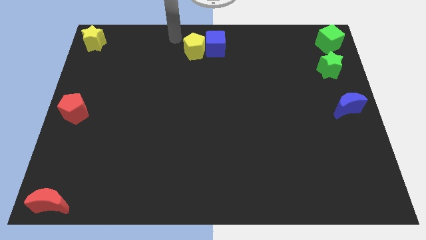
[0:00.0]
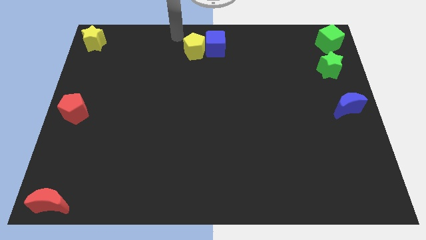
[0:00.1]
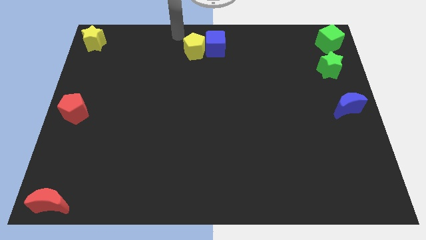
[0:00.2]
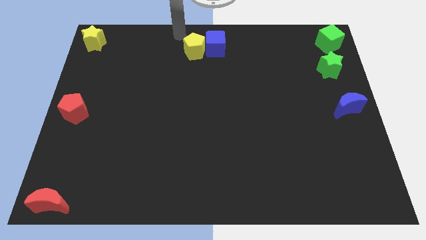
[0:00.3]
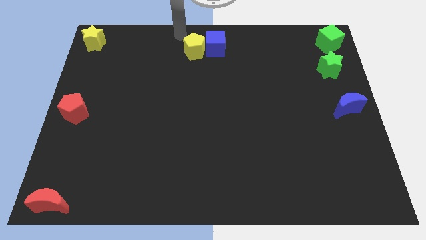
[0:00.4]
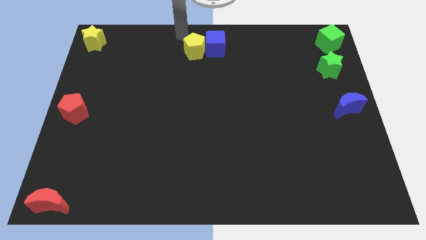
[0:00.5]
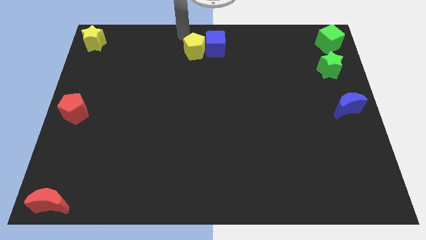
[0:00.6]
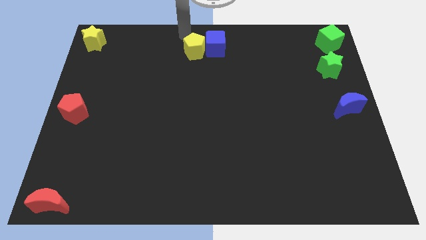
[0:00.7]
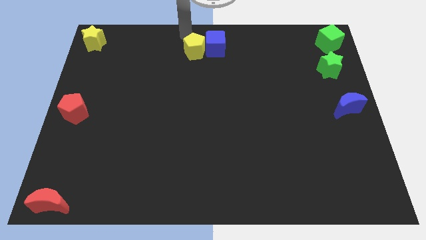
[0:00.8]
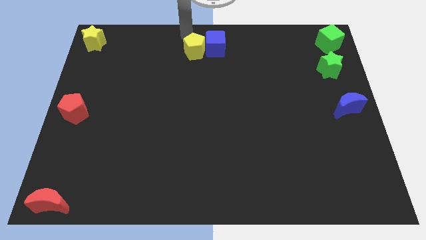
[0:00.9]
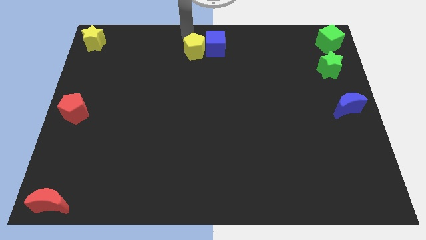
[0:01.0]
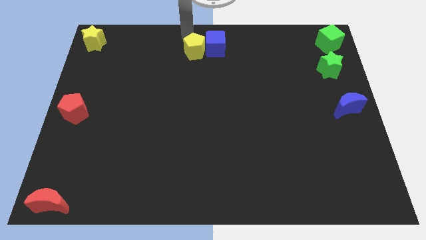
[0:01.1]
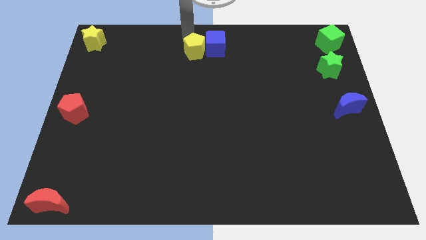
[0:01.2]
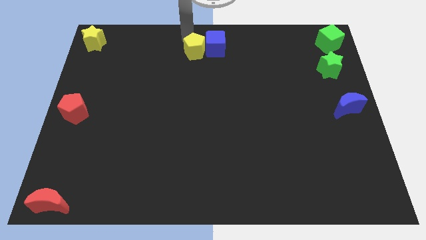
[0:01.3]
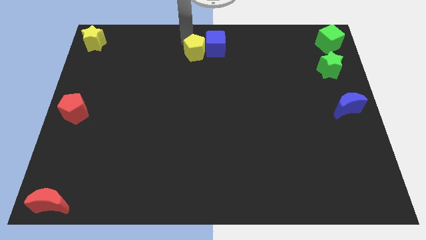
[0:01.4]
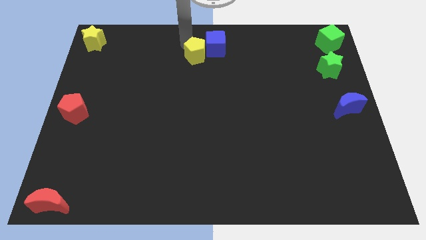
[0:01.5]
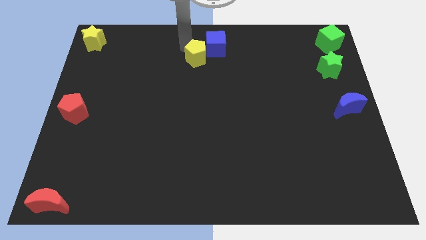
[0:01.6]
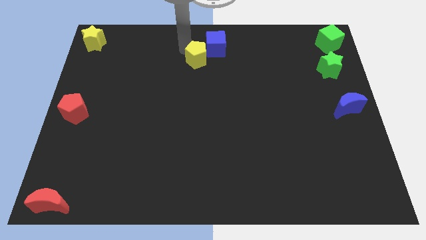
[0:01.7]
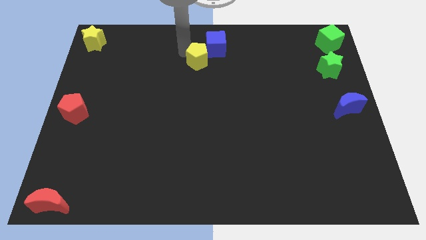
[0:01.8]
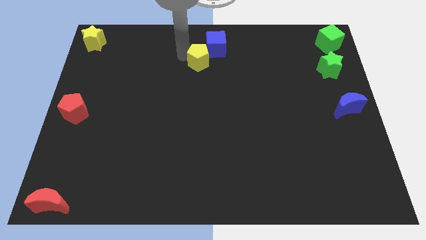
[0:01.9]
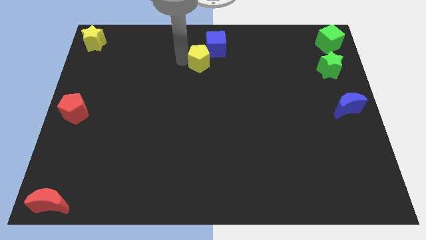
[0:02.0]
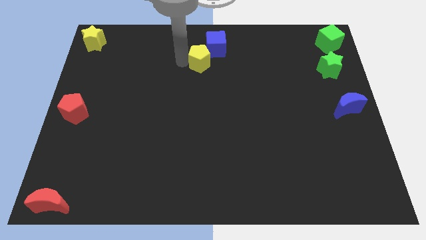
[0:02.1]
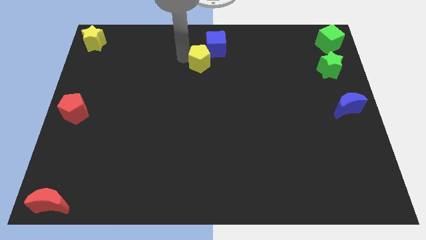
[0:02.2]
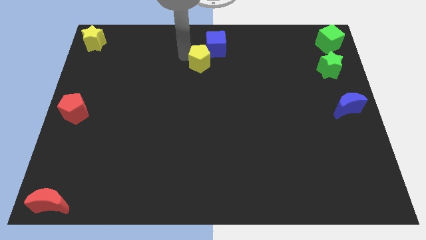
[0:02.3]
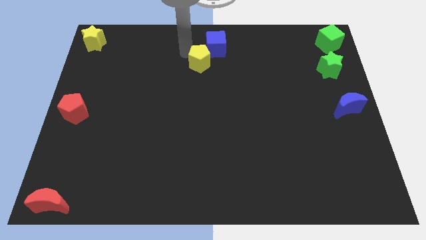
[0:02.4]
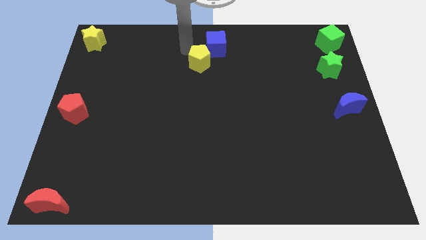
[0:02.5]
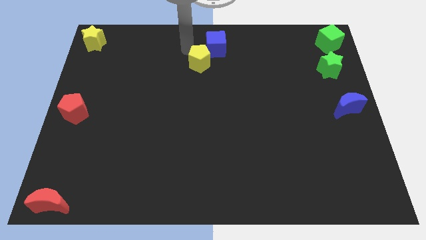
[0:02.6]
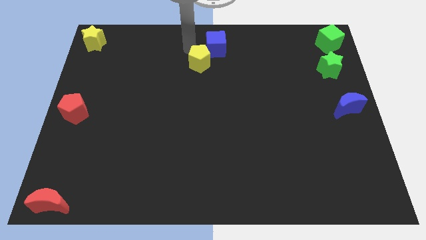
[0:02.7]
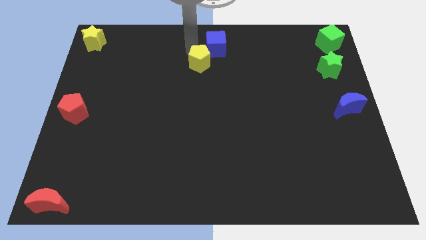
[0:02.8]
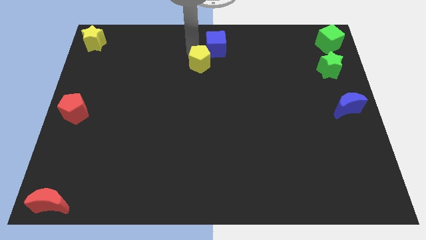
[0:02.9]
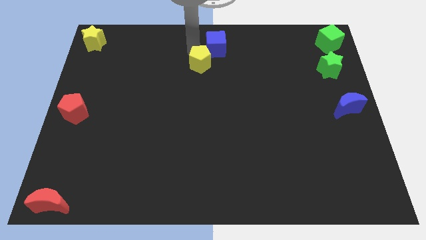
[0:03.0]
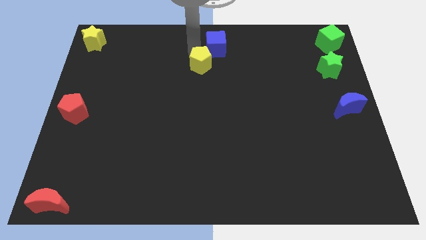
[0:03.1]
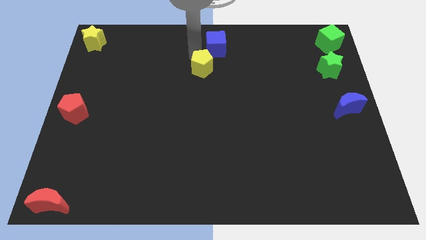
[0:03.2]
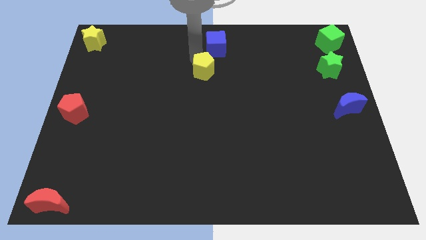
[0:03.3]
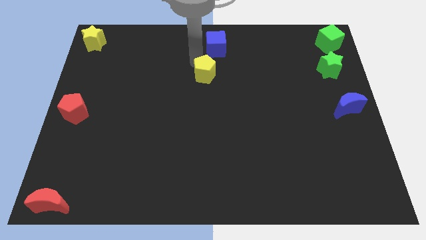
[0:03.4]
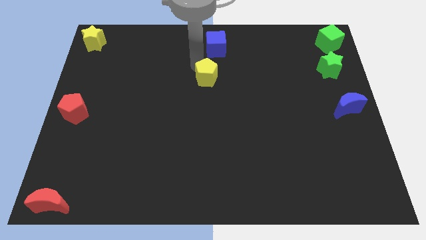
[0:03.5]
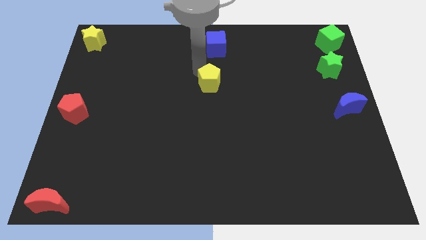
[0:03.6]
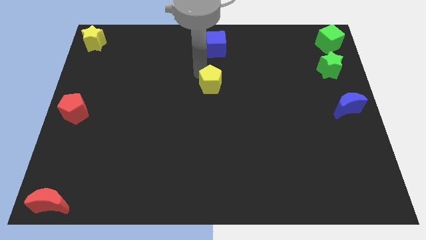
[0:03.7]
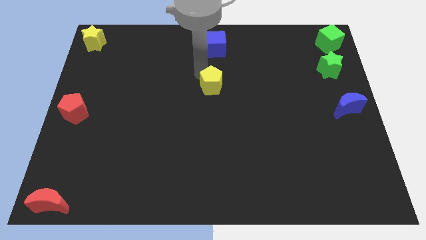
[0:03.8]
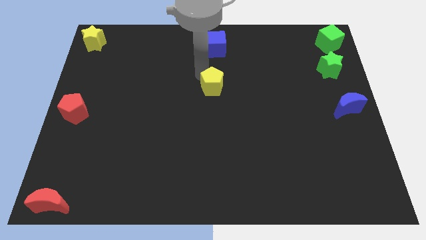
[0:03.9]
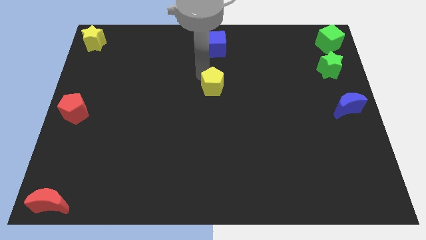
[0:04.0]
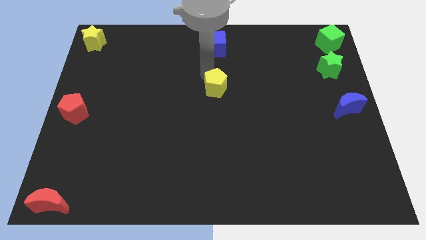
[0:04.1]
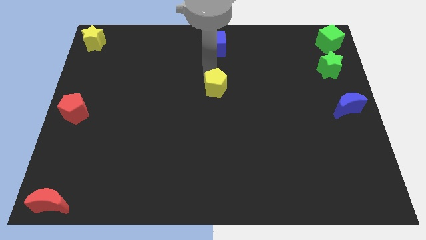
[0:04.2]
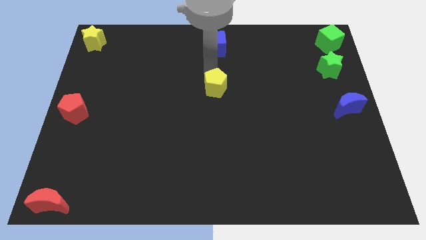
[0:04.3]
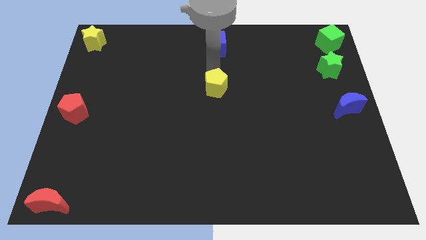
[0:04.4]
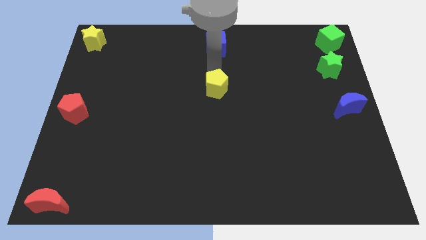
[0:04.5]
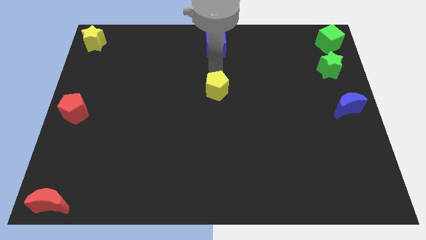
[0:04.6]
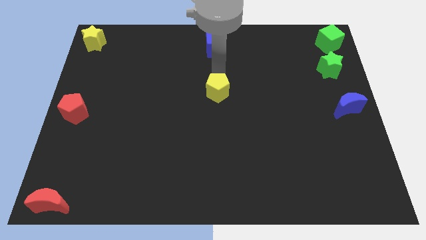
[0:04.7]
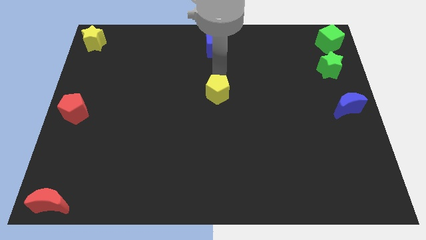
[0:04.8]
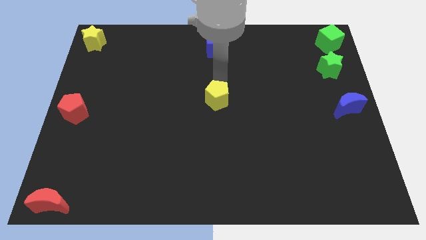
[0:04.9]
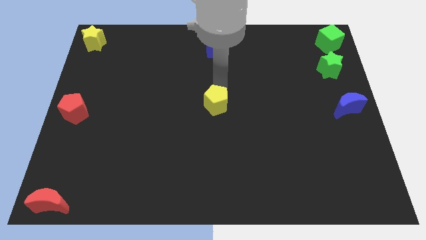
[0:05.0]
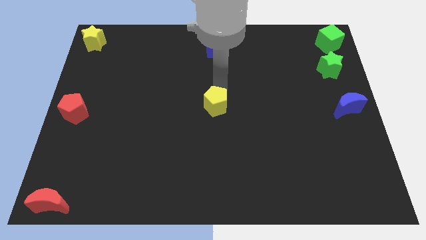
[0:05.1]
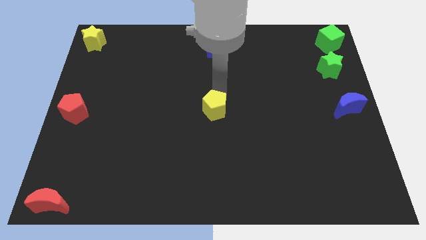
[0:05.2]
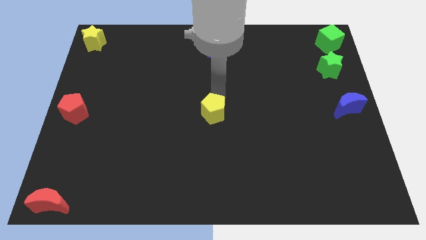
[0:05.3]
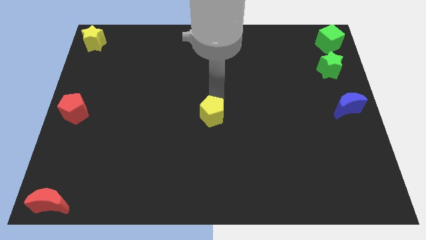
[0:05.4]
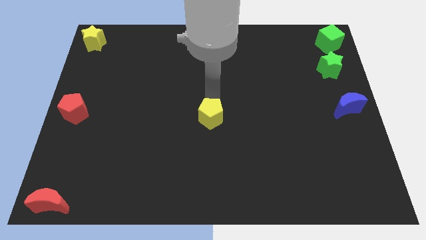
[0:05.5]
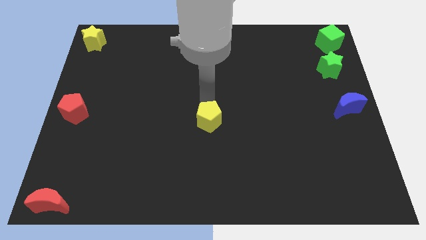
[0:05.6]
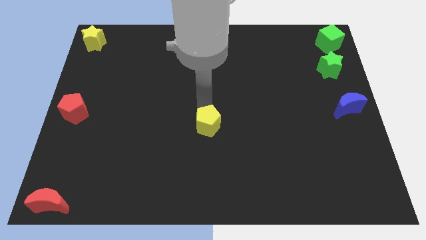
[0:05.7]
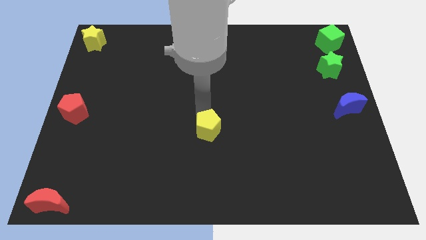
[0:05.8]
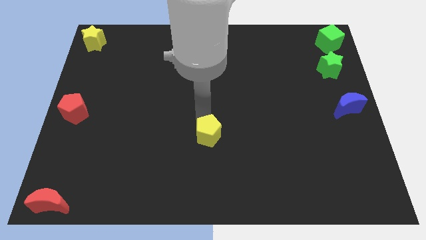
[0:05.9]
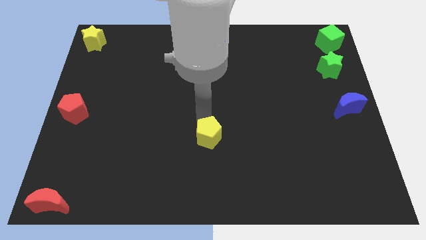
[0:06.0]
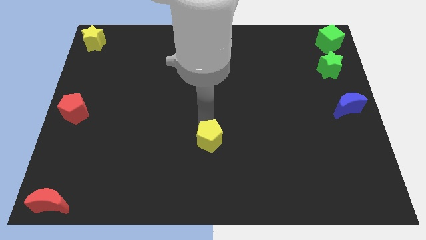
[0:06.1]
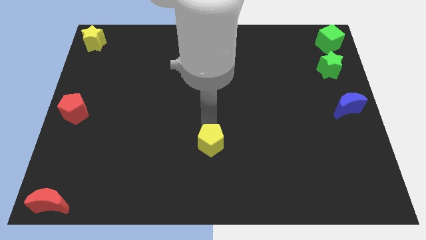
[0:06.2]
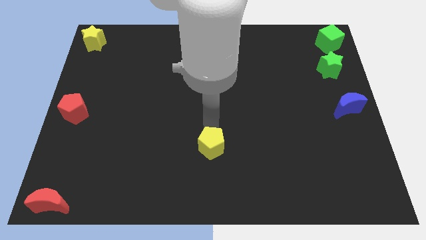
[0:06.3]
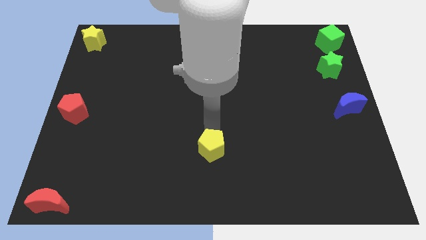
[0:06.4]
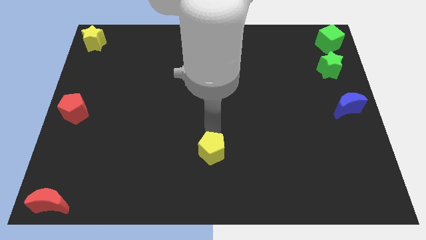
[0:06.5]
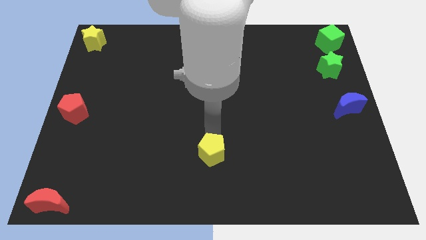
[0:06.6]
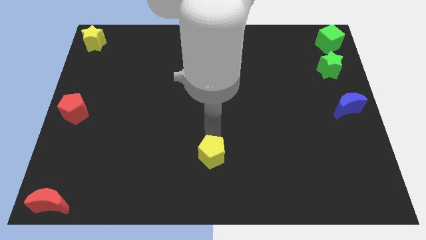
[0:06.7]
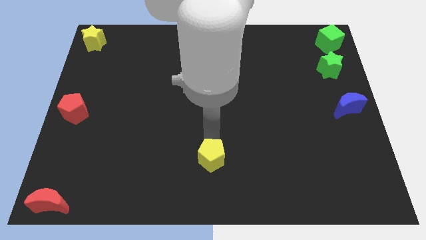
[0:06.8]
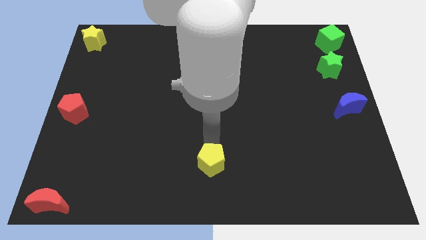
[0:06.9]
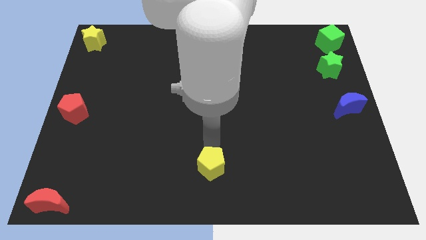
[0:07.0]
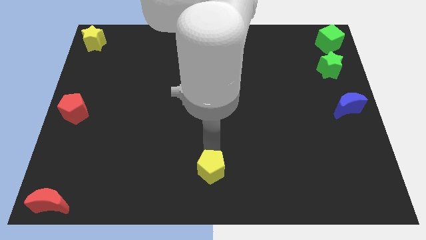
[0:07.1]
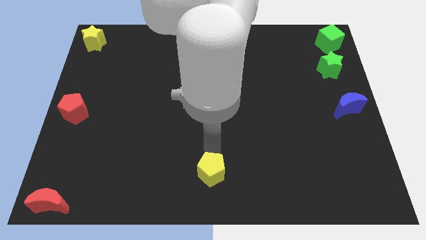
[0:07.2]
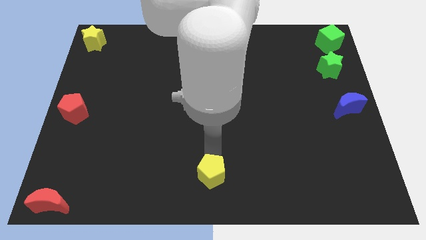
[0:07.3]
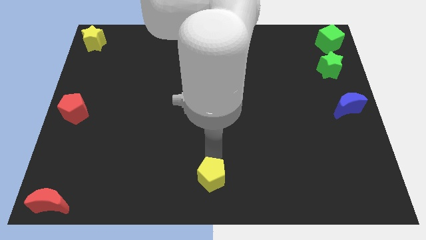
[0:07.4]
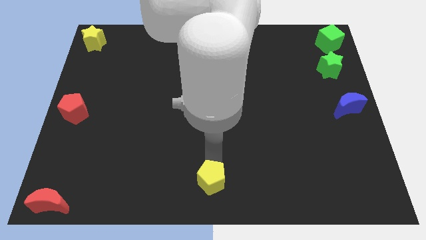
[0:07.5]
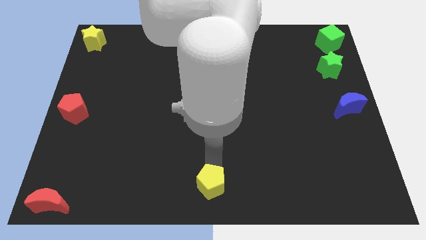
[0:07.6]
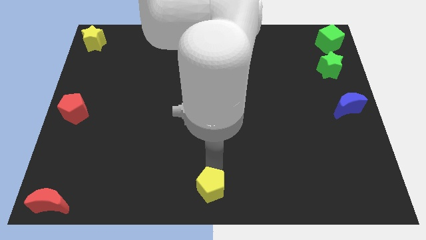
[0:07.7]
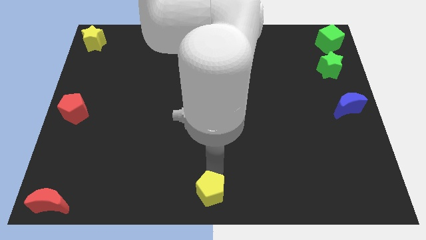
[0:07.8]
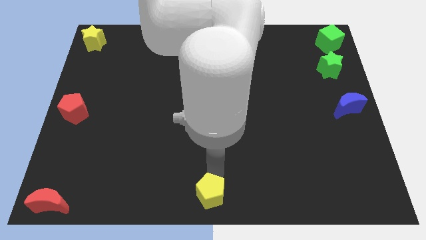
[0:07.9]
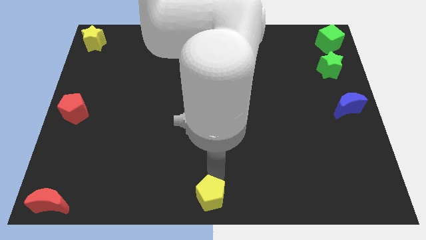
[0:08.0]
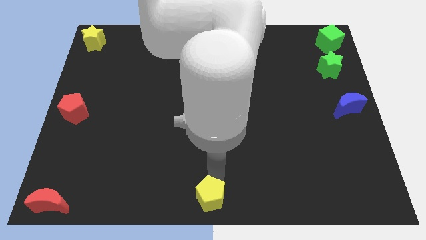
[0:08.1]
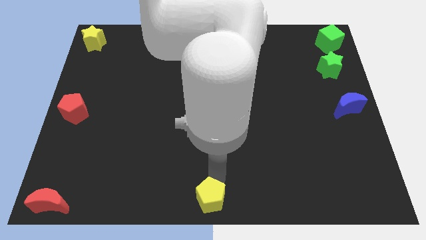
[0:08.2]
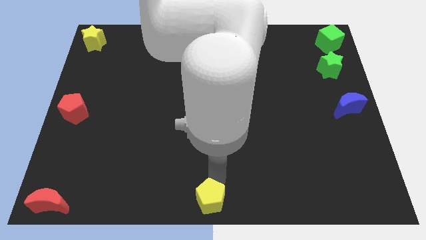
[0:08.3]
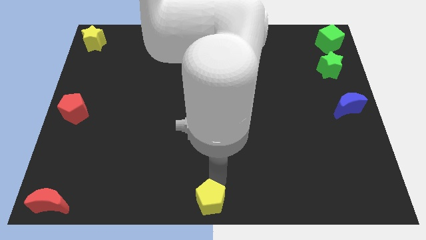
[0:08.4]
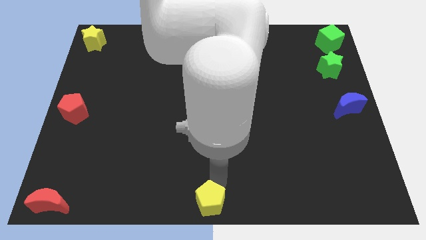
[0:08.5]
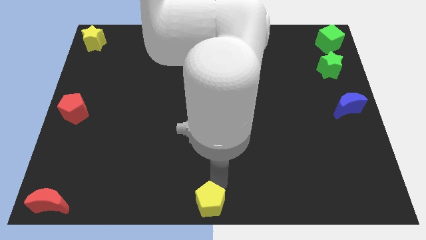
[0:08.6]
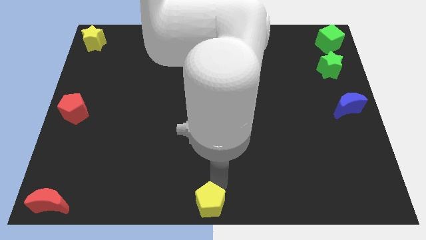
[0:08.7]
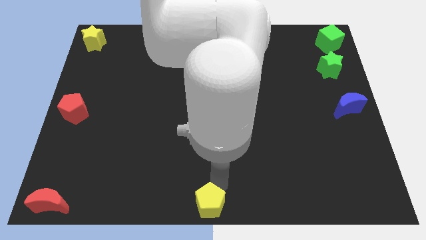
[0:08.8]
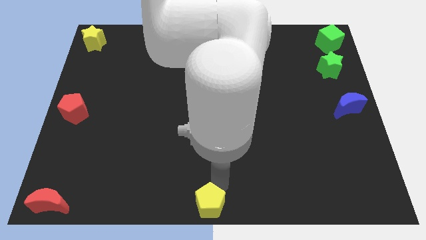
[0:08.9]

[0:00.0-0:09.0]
drag pentagon to the bottom middle of the board

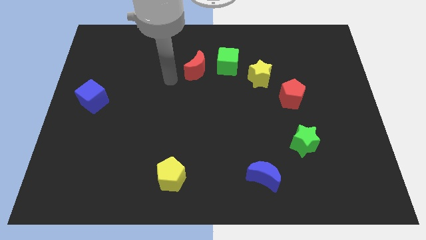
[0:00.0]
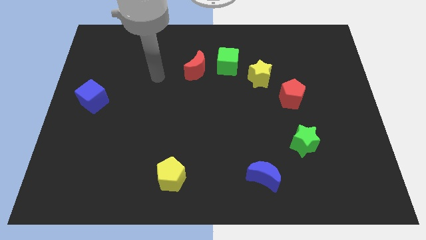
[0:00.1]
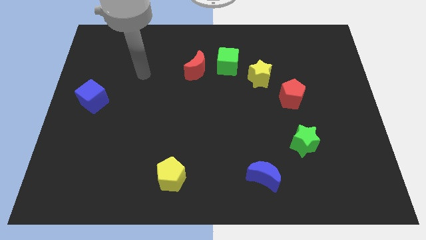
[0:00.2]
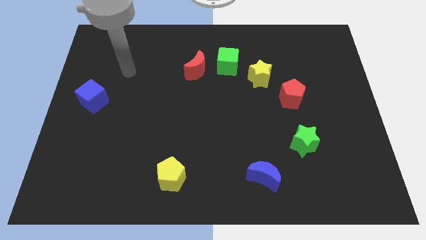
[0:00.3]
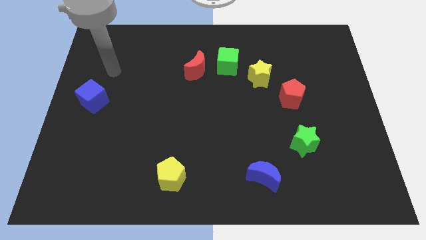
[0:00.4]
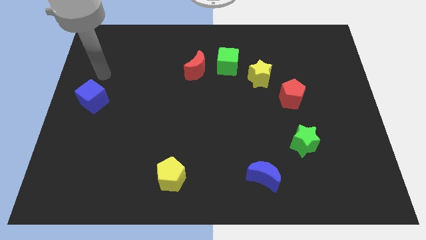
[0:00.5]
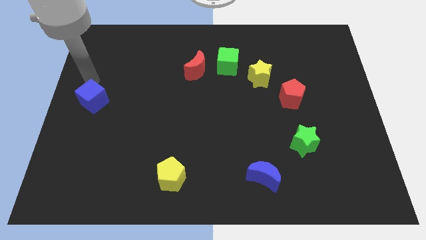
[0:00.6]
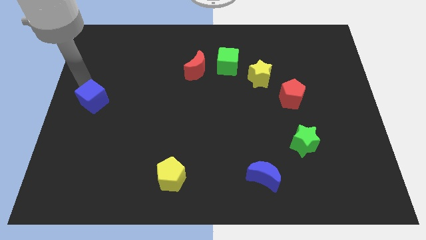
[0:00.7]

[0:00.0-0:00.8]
point at the top left side of the blue cube
